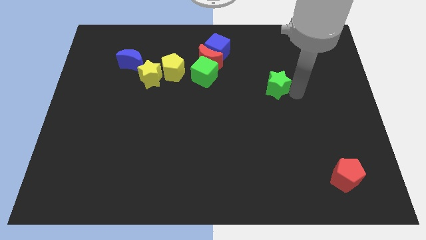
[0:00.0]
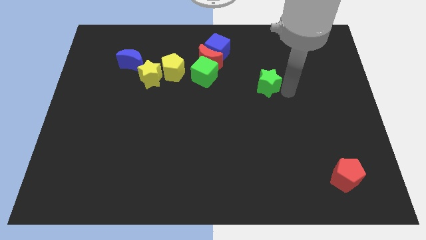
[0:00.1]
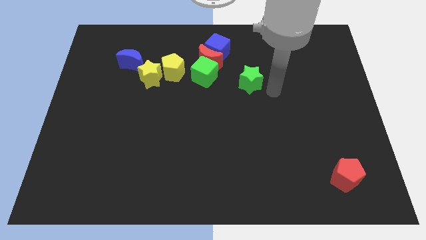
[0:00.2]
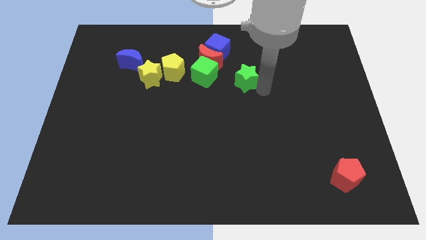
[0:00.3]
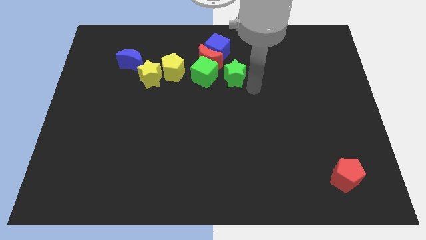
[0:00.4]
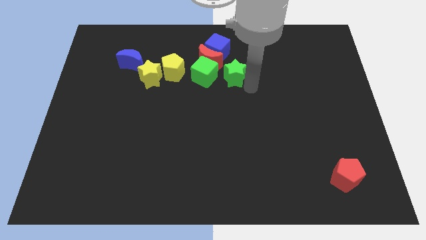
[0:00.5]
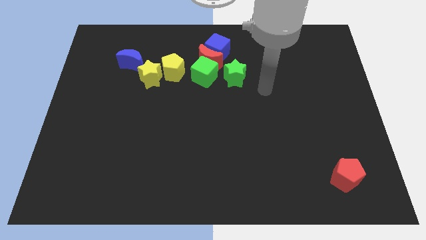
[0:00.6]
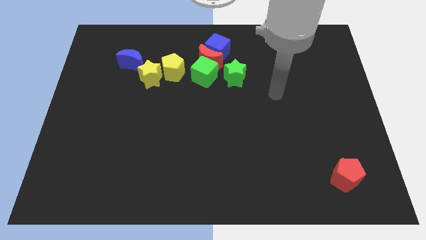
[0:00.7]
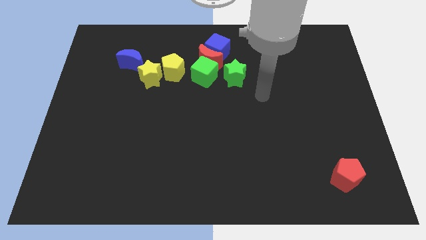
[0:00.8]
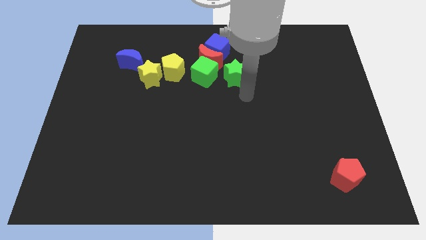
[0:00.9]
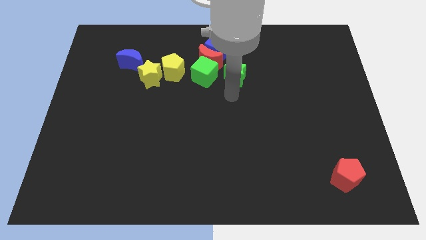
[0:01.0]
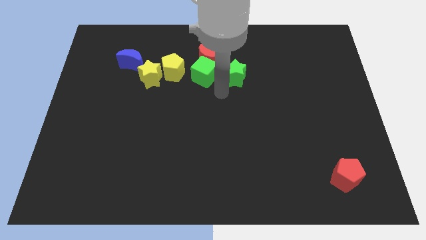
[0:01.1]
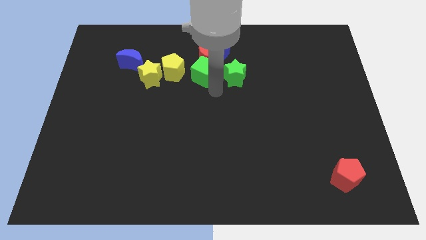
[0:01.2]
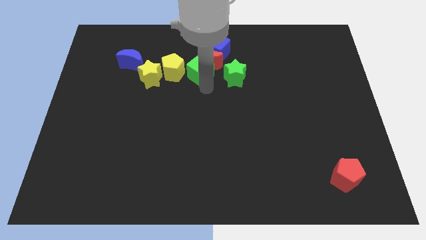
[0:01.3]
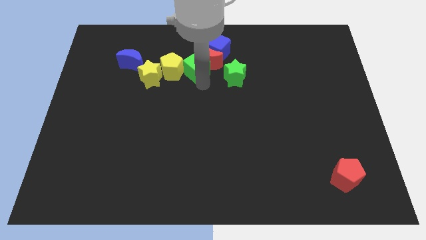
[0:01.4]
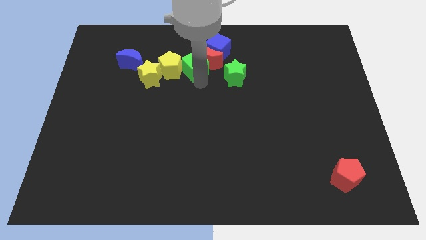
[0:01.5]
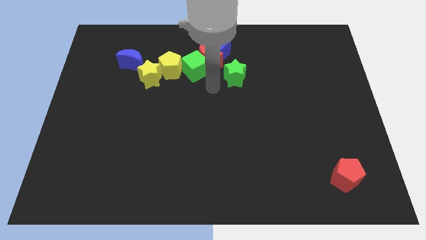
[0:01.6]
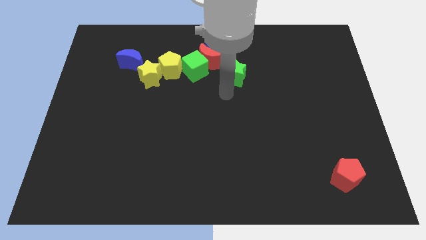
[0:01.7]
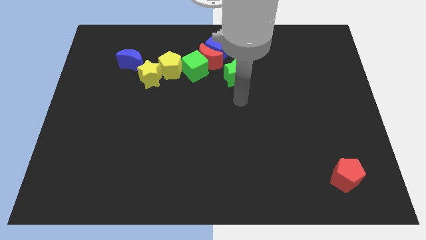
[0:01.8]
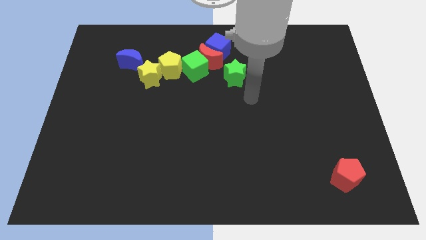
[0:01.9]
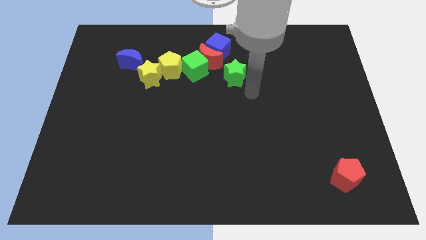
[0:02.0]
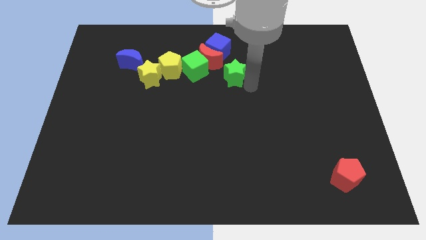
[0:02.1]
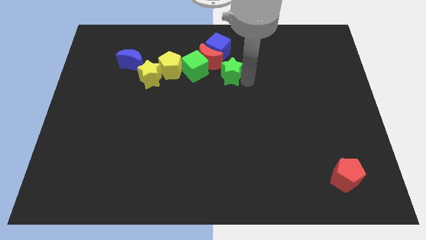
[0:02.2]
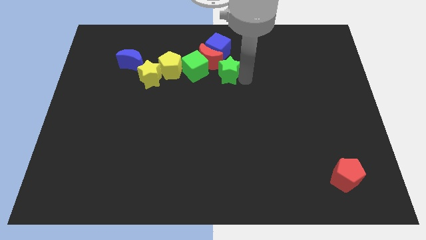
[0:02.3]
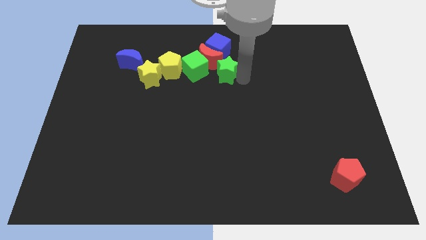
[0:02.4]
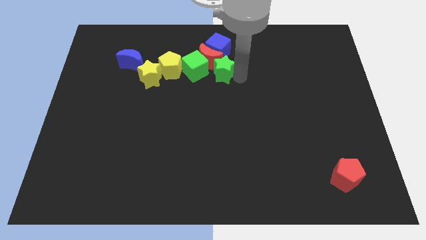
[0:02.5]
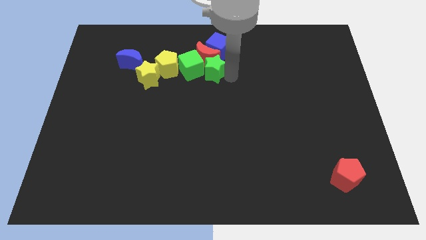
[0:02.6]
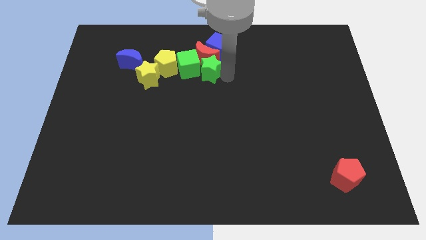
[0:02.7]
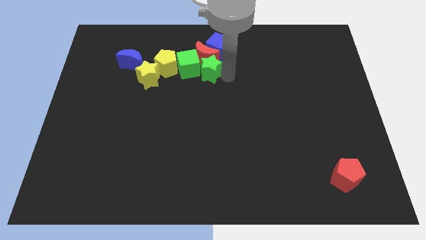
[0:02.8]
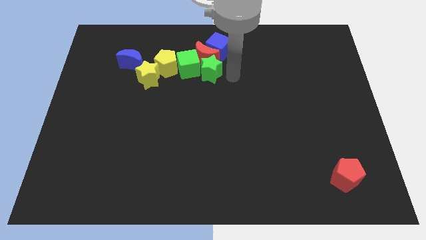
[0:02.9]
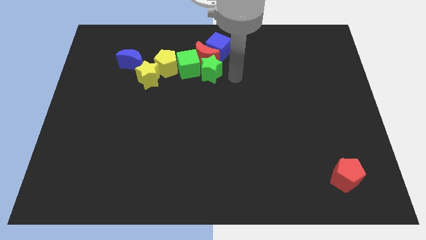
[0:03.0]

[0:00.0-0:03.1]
push the green star into the green cube

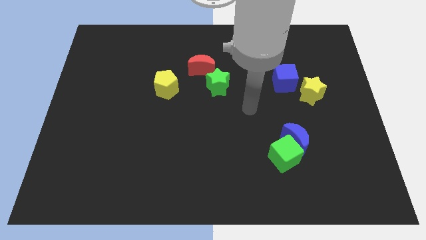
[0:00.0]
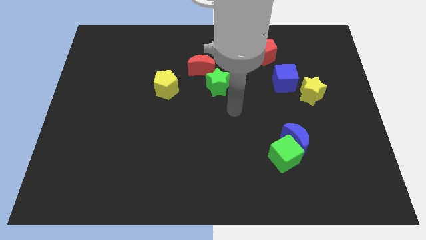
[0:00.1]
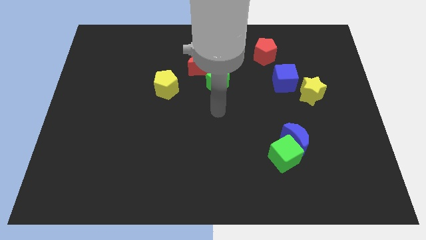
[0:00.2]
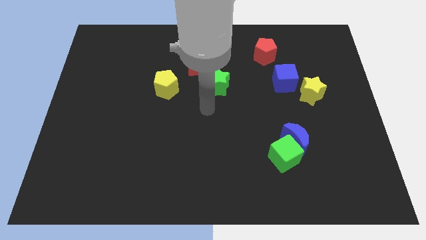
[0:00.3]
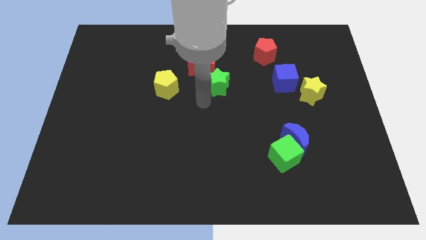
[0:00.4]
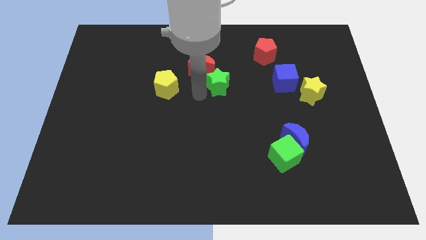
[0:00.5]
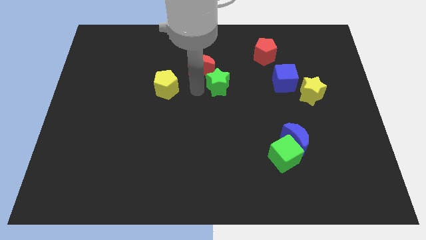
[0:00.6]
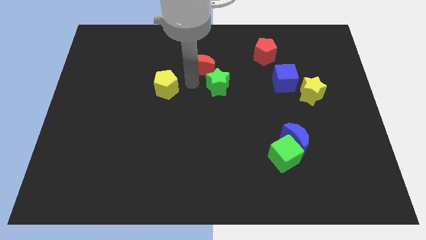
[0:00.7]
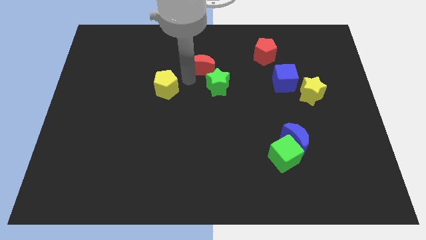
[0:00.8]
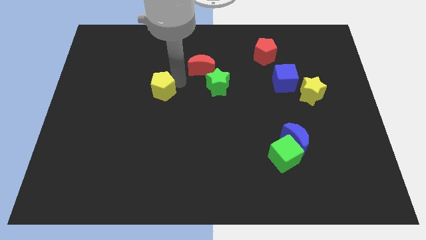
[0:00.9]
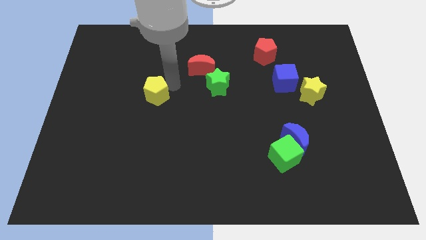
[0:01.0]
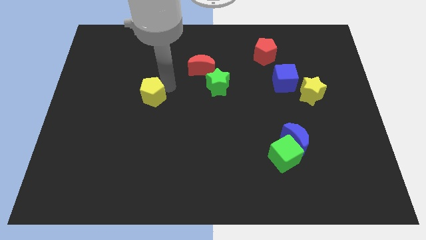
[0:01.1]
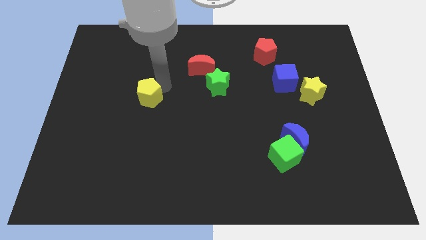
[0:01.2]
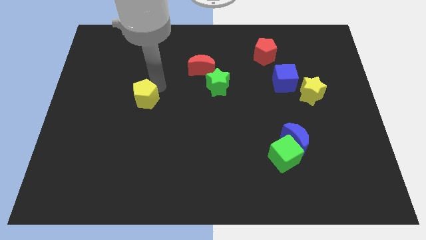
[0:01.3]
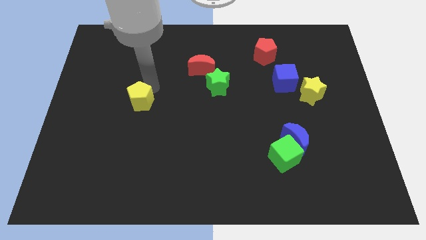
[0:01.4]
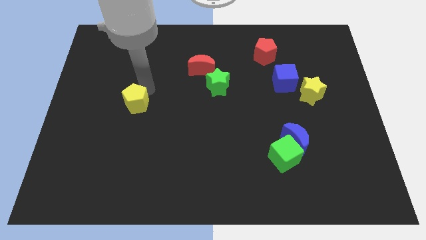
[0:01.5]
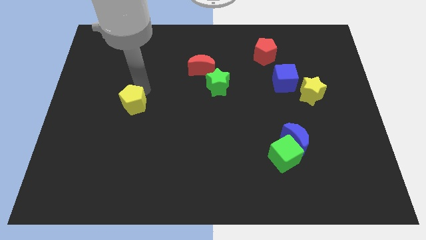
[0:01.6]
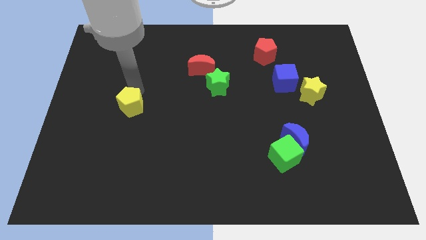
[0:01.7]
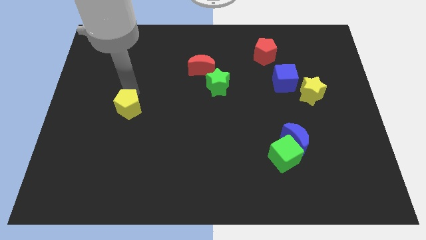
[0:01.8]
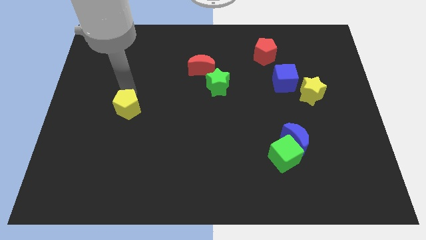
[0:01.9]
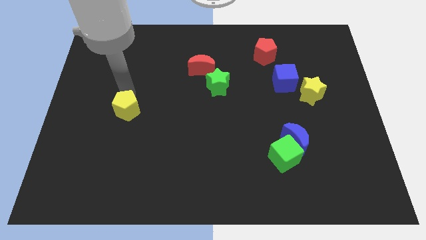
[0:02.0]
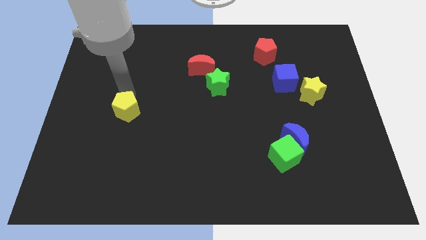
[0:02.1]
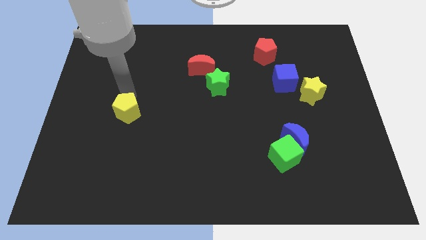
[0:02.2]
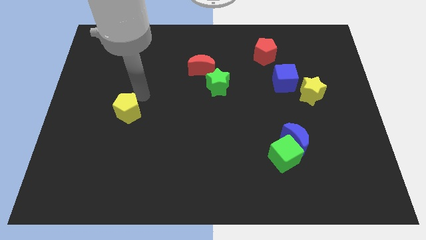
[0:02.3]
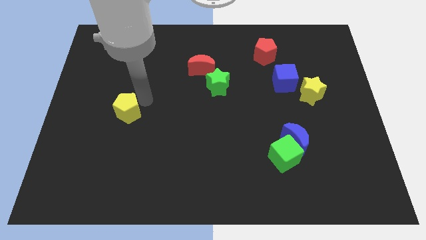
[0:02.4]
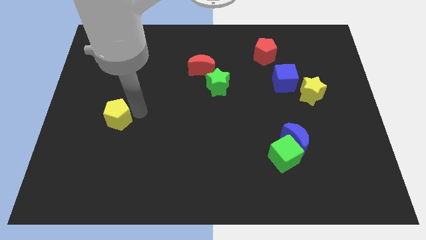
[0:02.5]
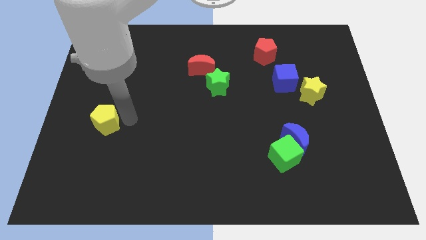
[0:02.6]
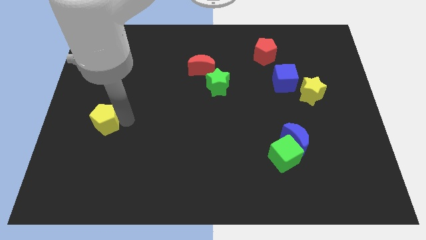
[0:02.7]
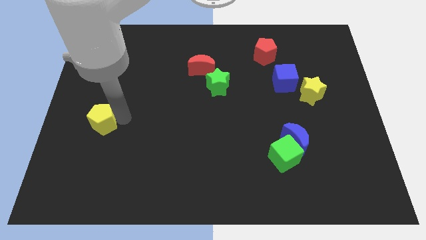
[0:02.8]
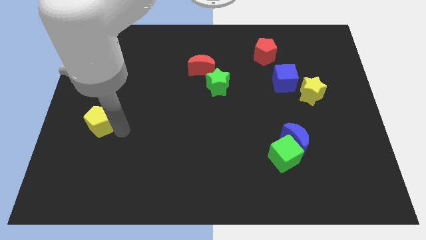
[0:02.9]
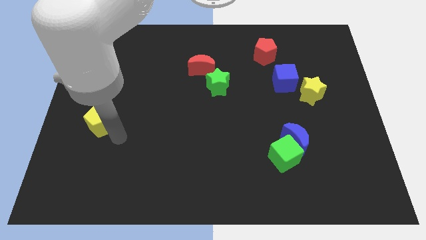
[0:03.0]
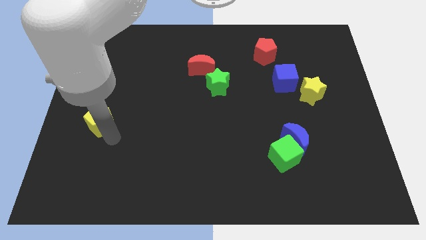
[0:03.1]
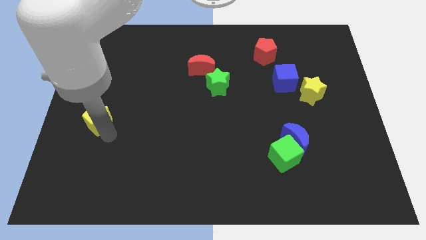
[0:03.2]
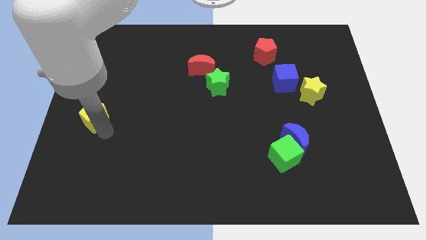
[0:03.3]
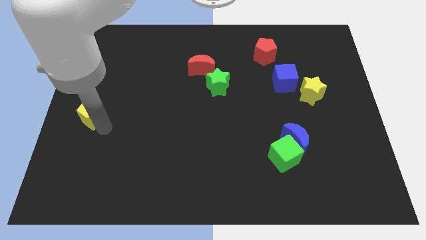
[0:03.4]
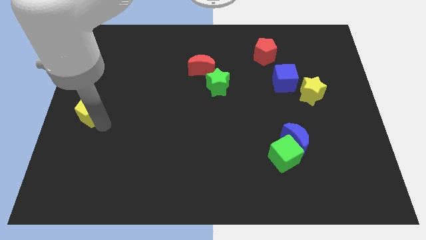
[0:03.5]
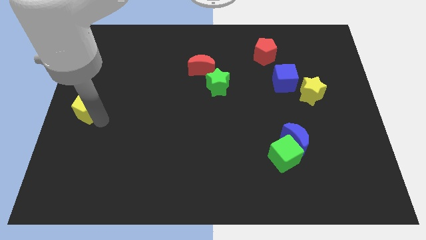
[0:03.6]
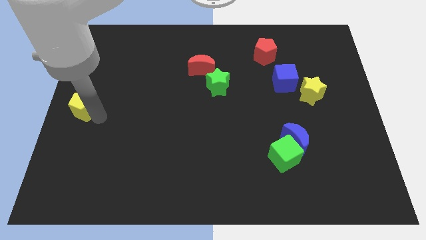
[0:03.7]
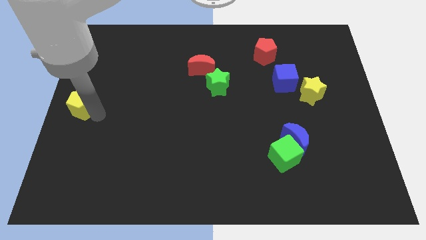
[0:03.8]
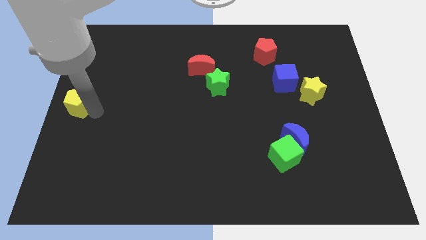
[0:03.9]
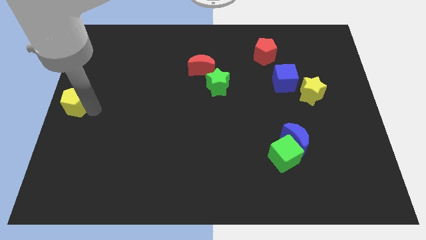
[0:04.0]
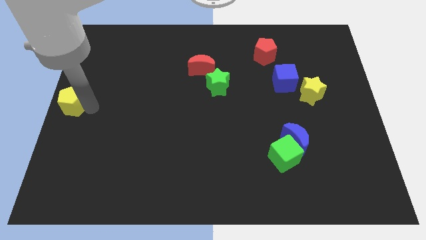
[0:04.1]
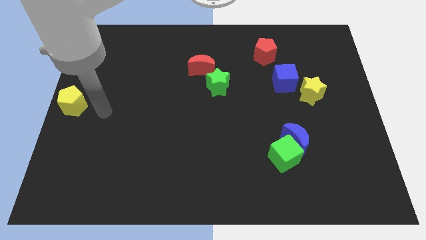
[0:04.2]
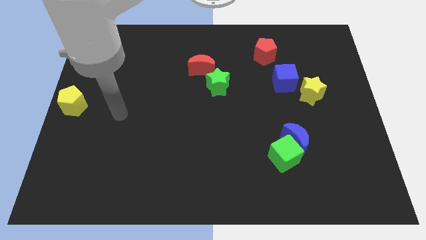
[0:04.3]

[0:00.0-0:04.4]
move the yellow pentagon to the left center of the board

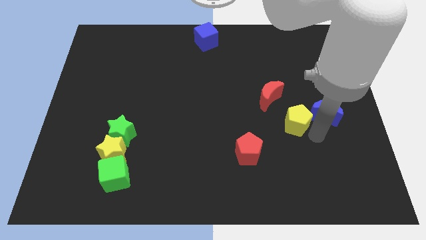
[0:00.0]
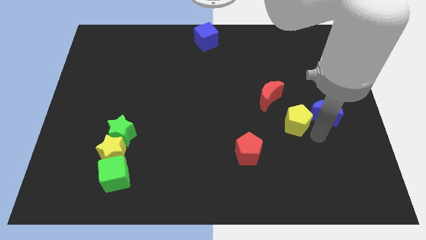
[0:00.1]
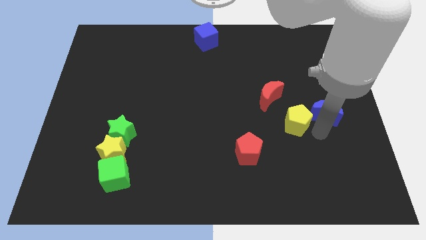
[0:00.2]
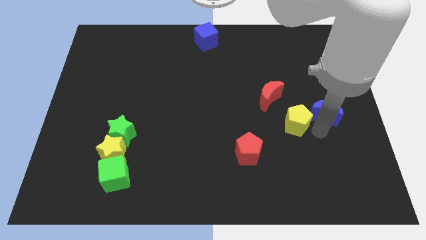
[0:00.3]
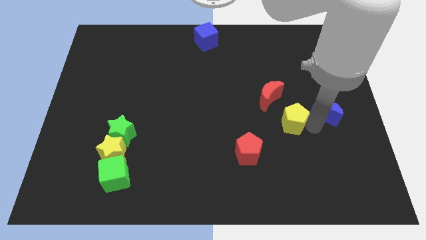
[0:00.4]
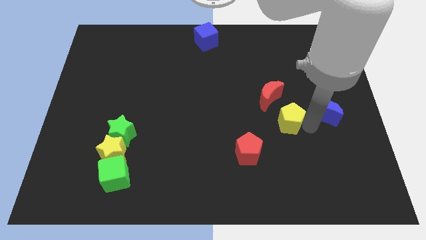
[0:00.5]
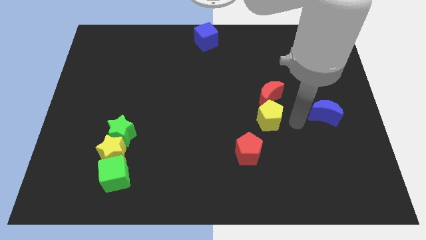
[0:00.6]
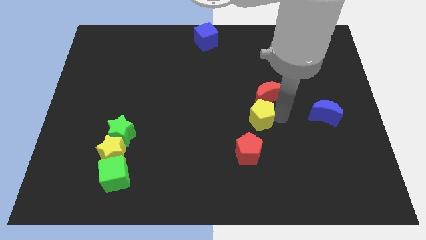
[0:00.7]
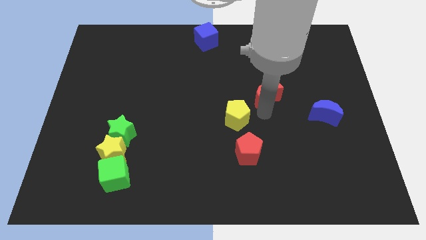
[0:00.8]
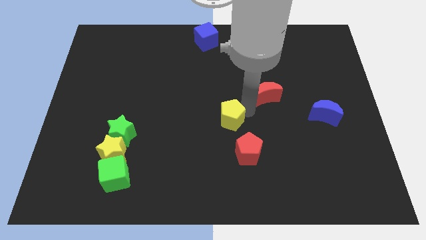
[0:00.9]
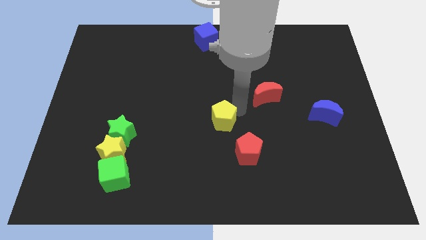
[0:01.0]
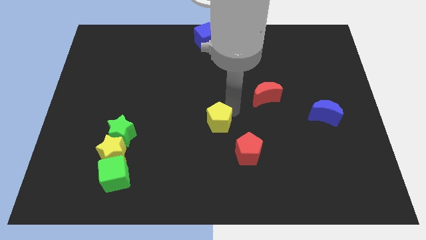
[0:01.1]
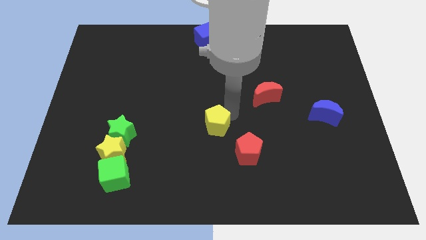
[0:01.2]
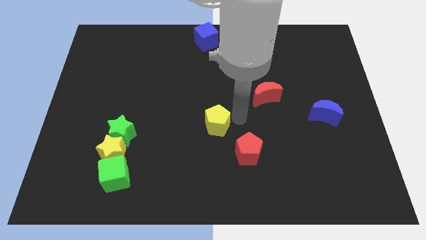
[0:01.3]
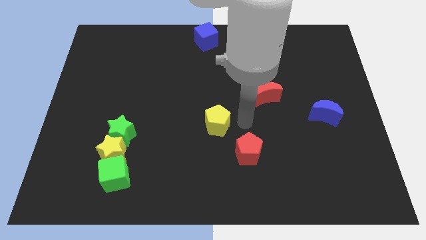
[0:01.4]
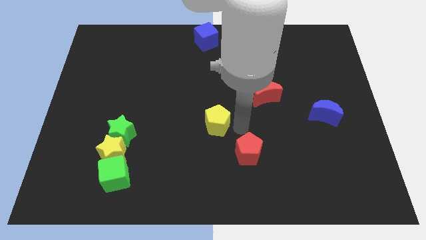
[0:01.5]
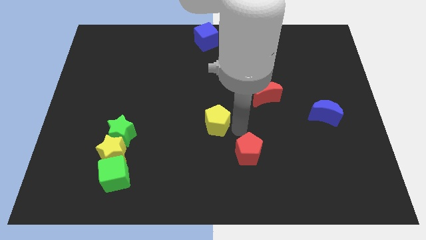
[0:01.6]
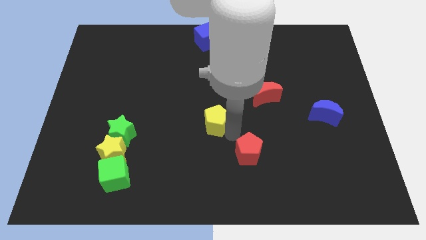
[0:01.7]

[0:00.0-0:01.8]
place the yellow pentagon below the blue cube
